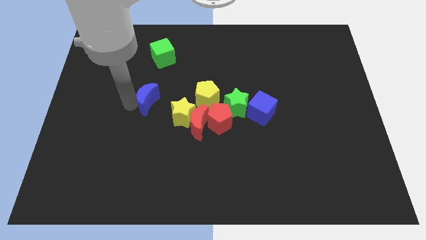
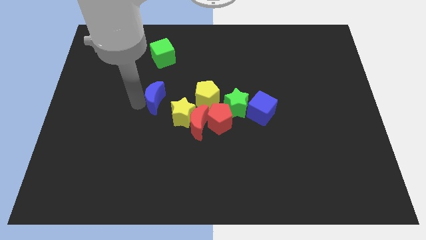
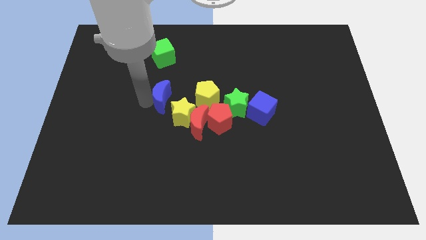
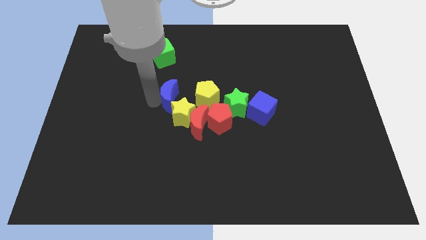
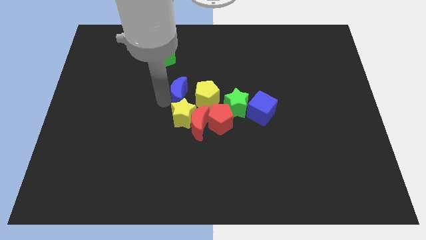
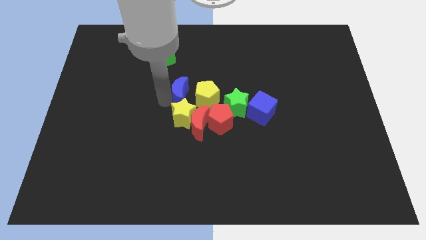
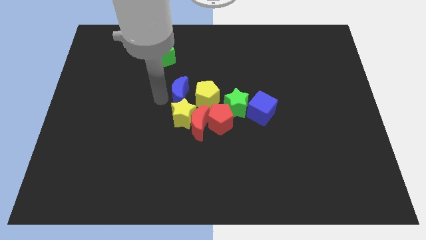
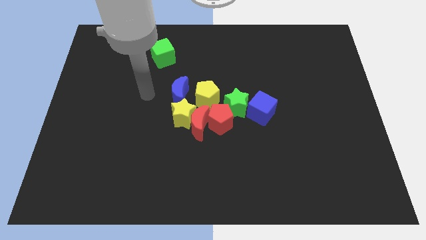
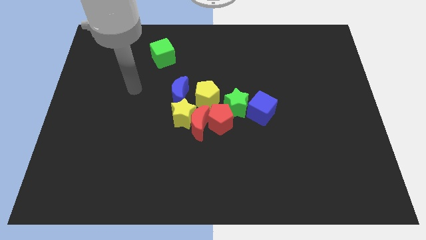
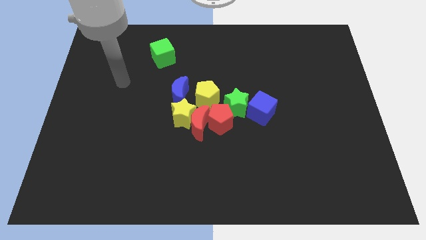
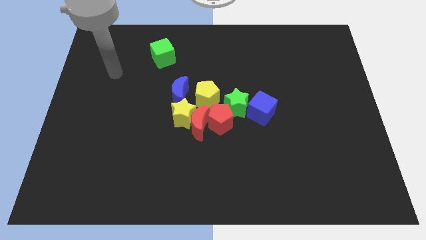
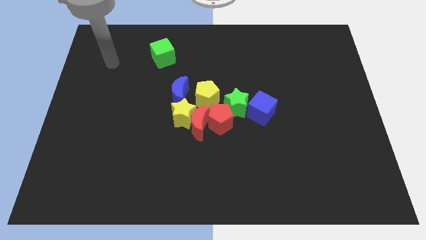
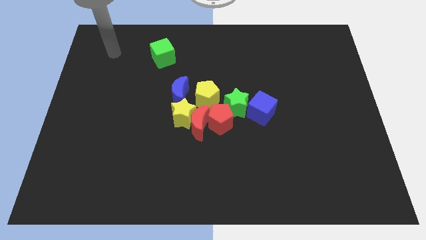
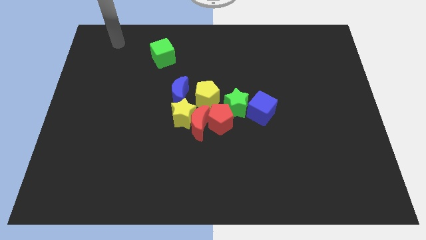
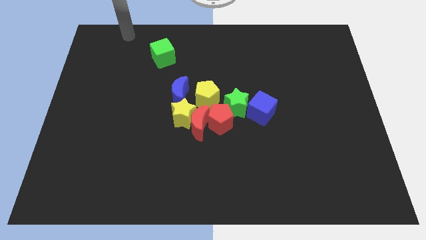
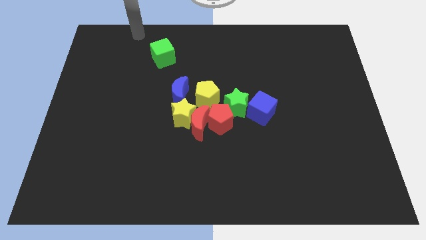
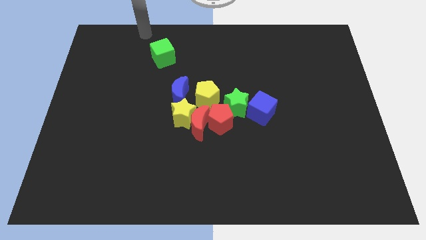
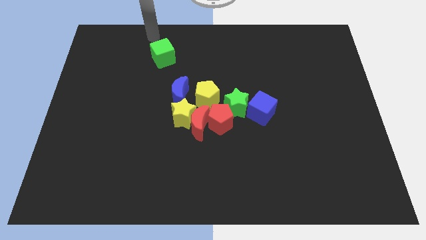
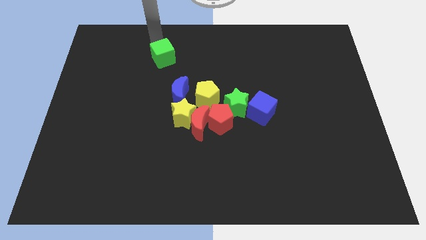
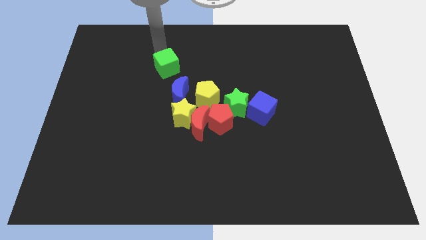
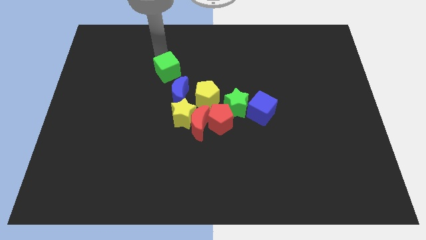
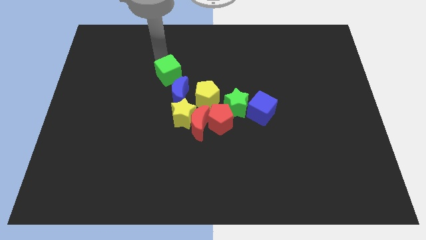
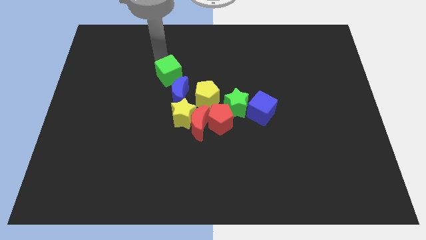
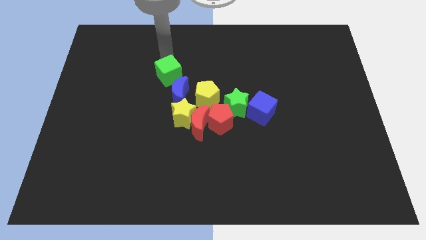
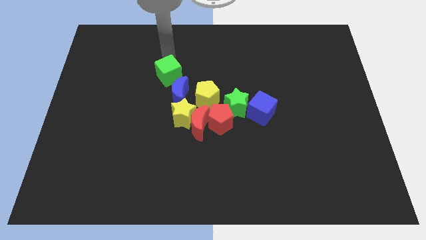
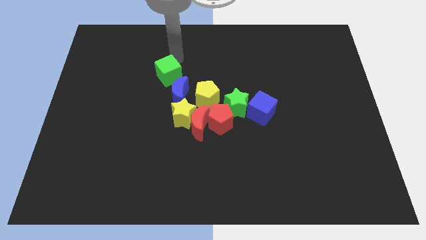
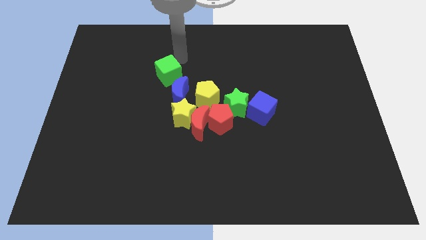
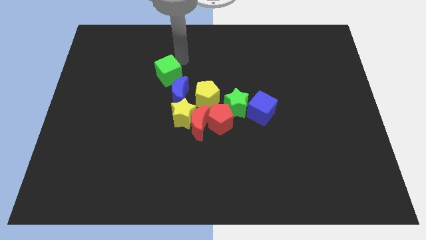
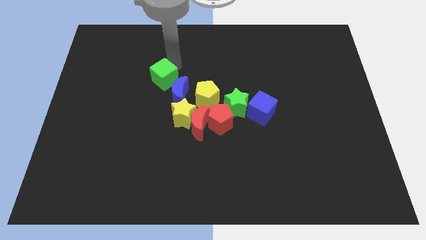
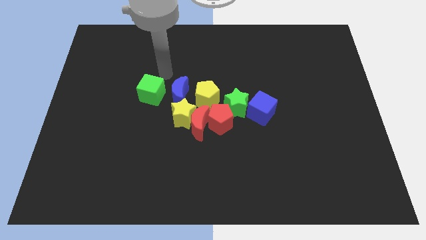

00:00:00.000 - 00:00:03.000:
move the blue moon close to the yellow pentagon

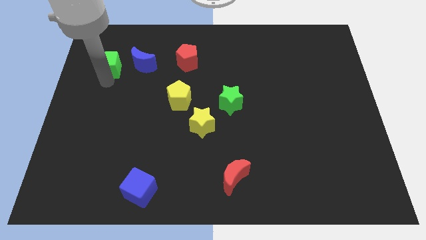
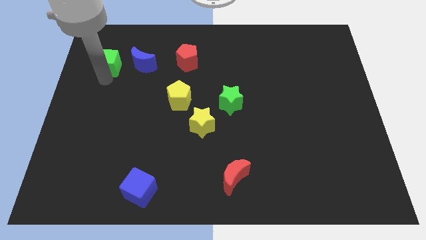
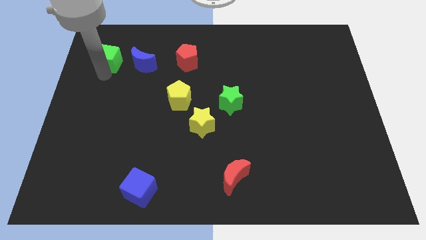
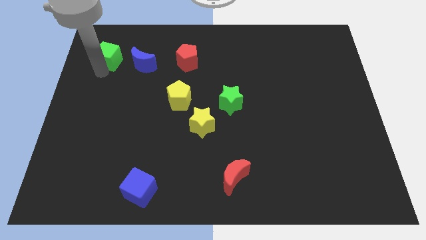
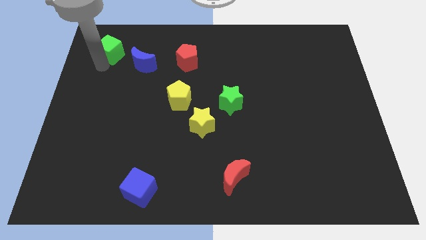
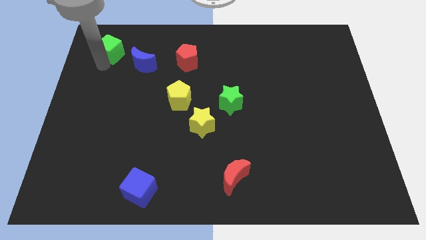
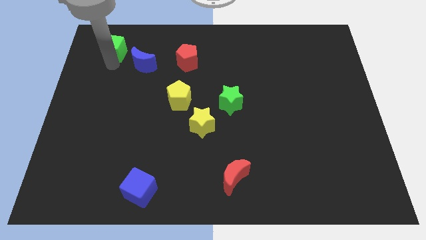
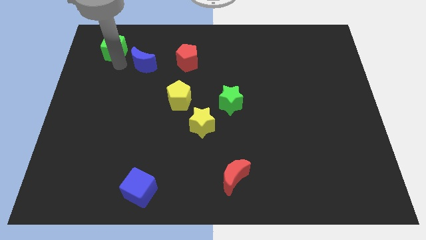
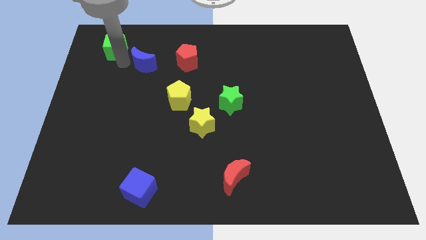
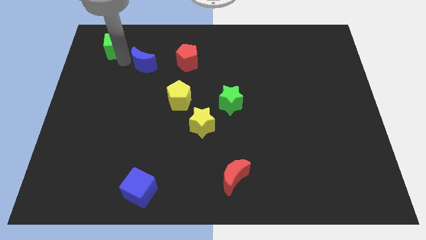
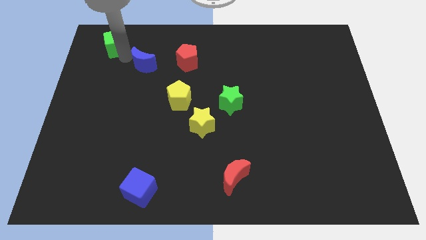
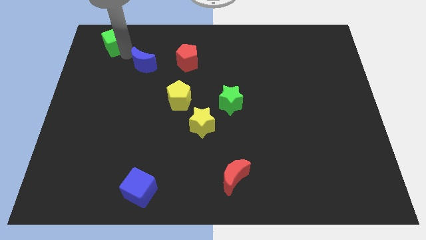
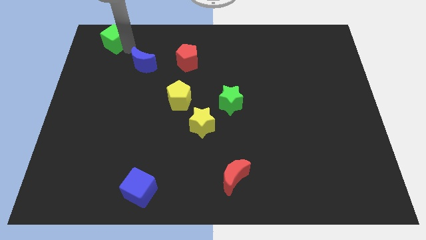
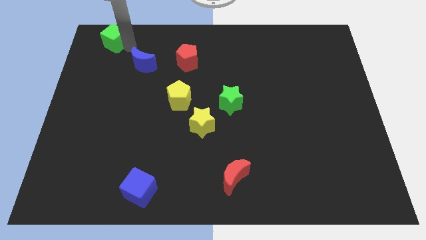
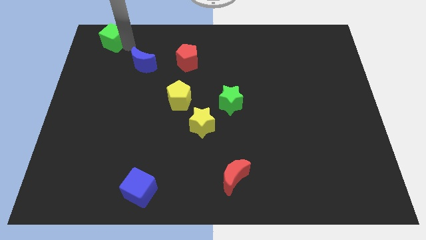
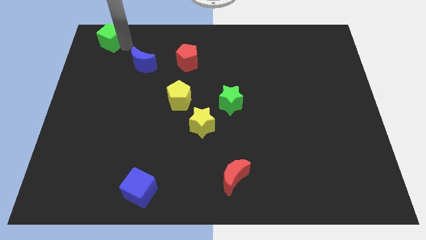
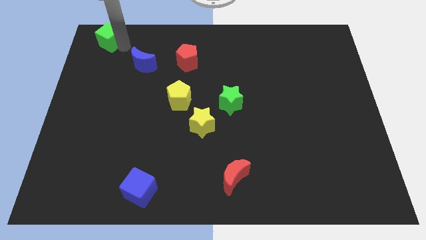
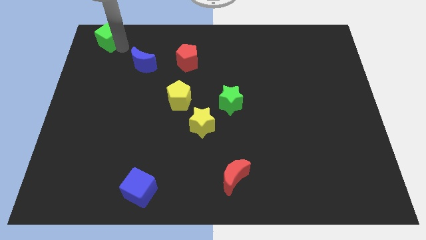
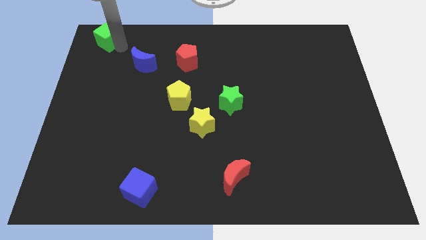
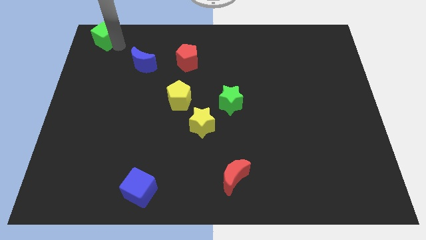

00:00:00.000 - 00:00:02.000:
put the green cube diagonally to blue moon

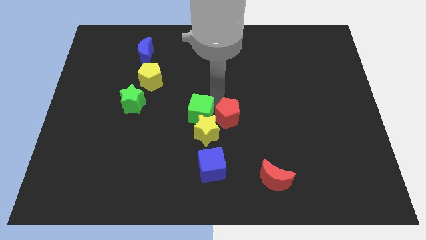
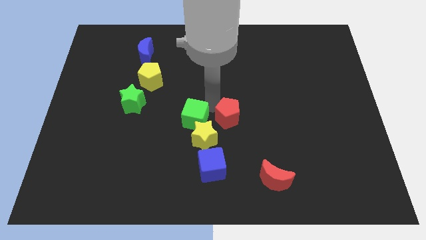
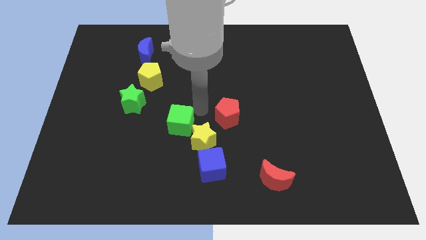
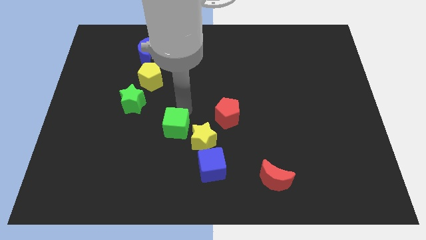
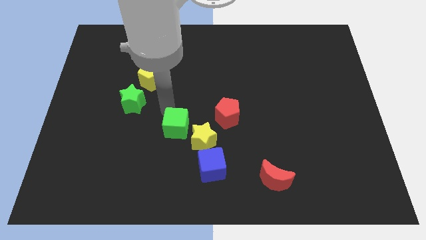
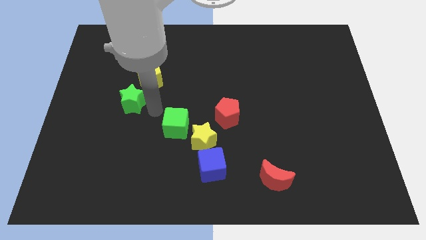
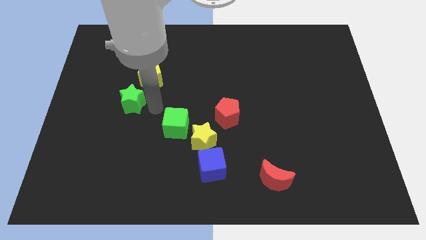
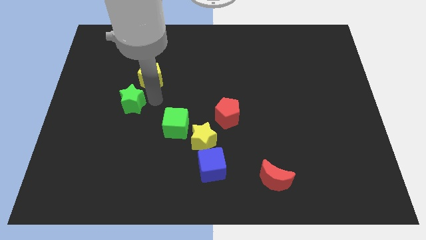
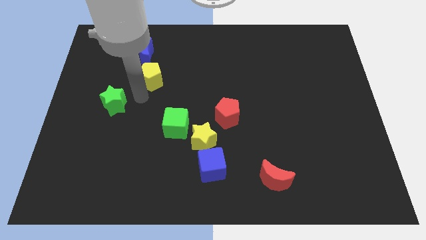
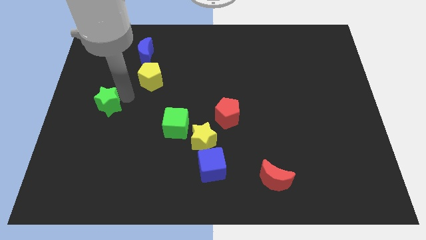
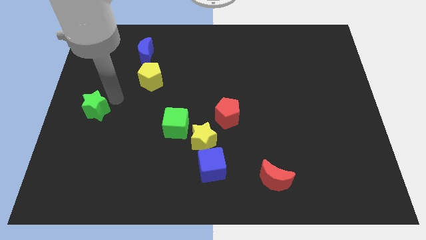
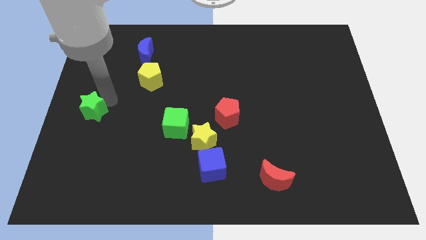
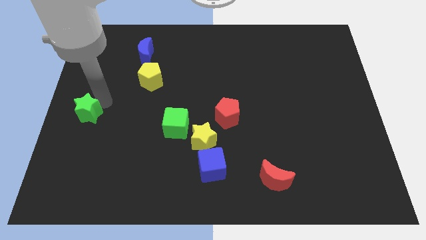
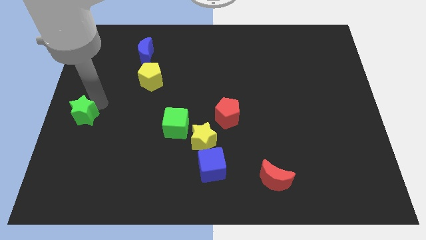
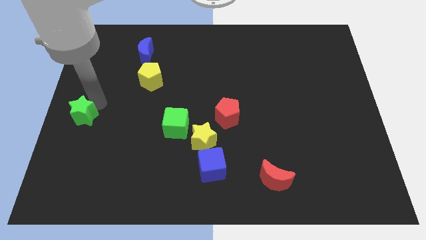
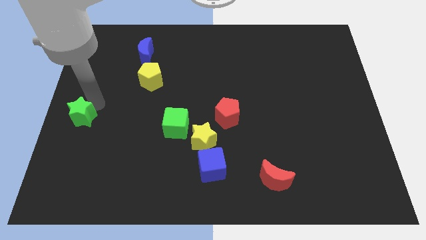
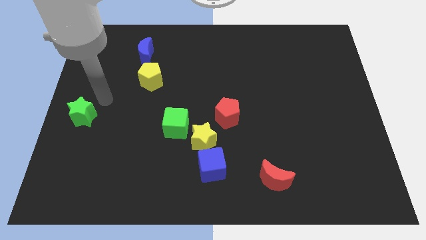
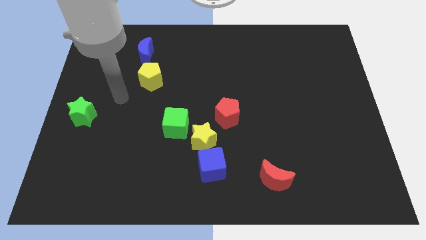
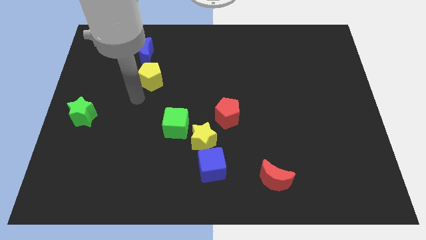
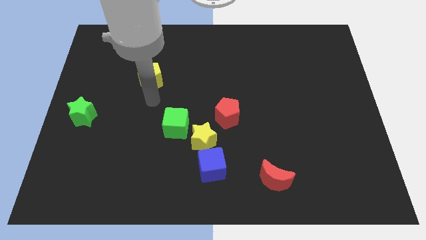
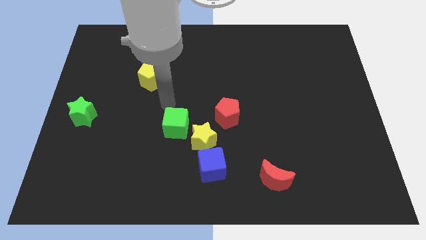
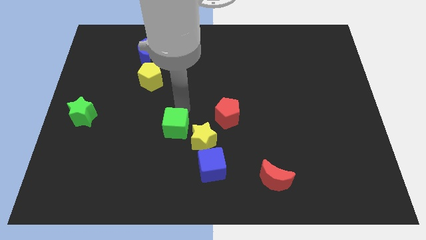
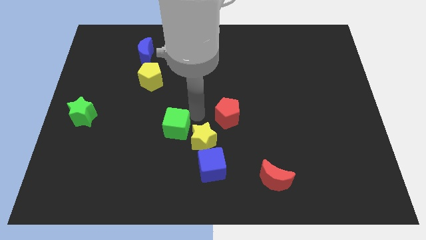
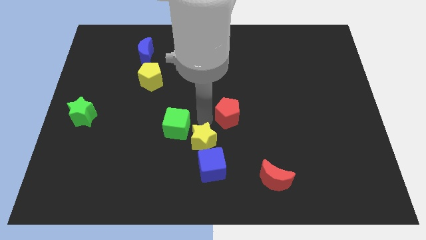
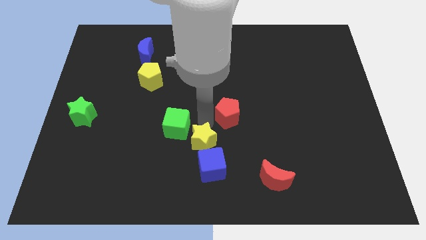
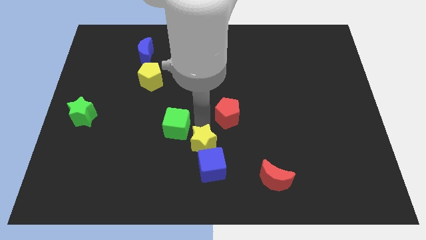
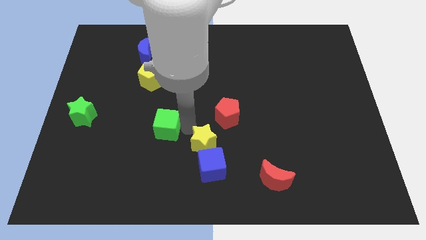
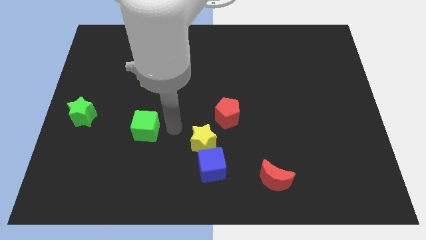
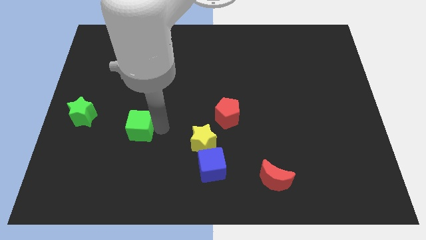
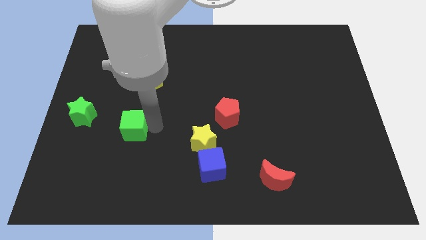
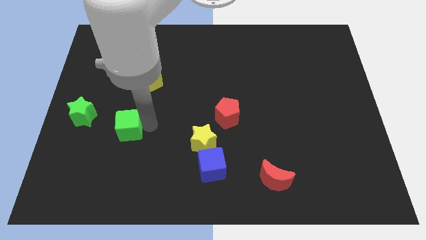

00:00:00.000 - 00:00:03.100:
move green star green cube towards left center

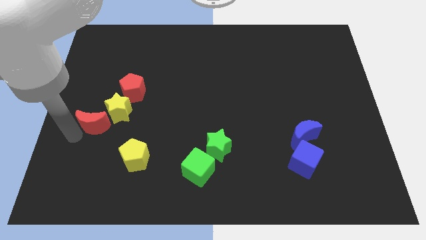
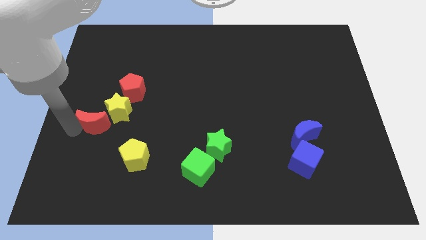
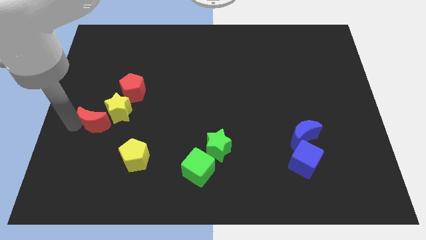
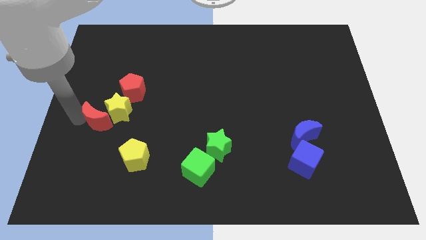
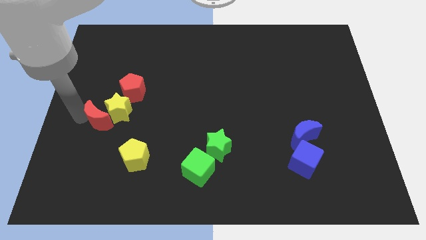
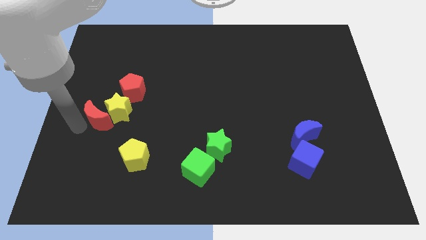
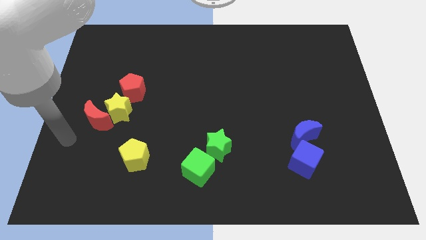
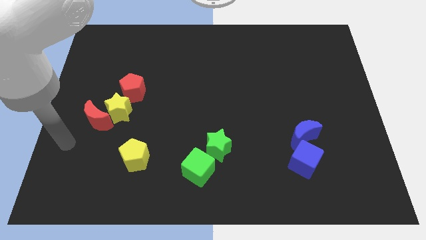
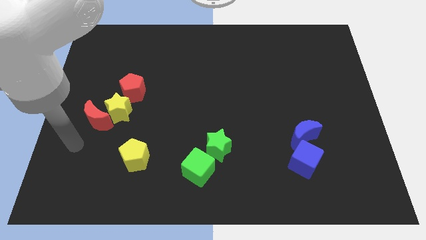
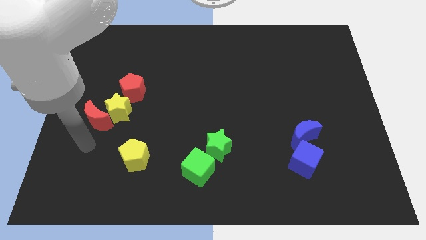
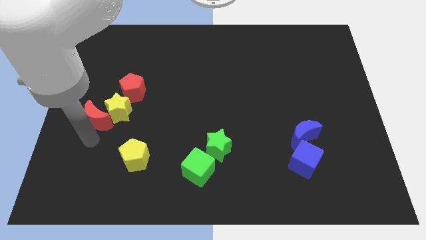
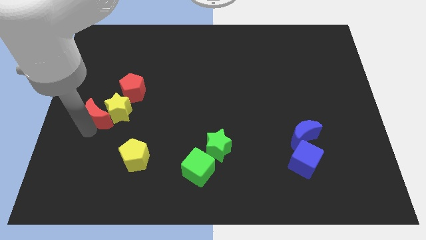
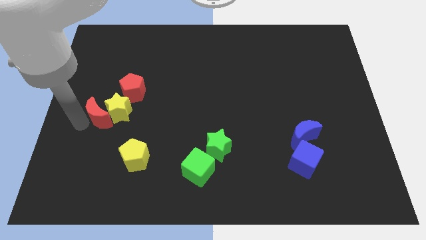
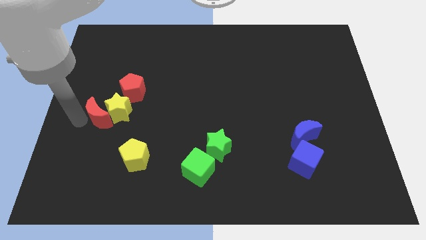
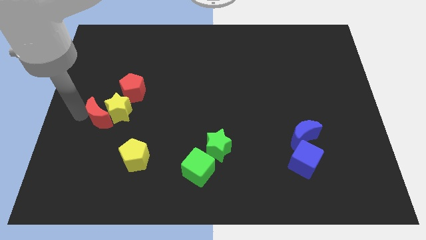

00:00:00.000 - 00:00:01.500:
slightly push red moon towards yellow star
